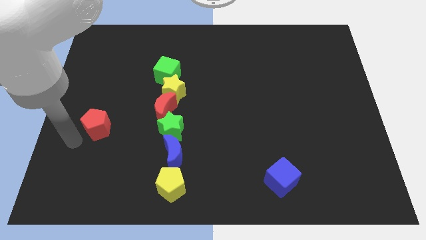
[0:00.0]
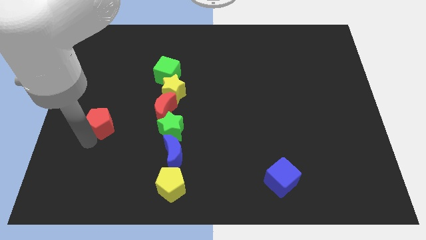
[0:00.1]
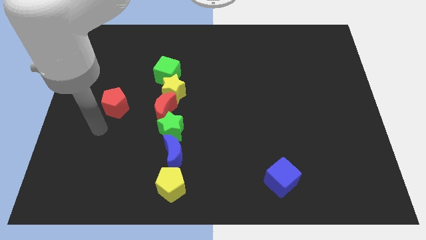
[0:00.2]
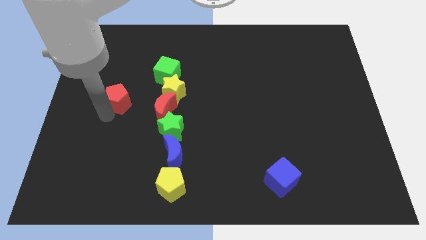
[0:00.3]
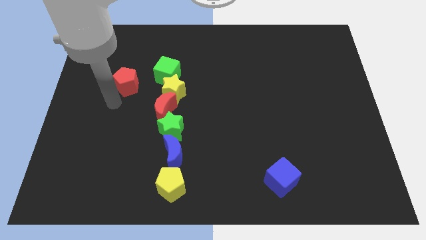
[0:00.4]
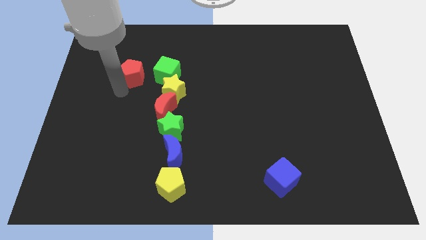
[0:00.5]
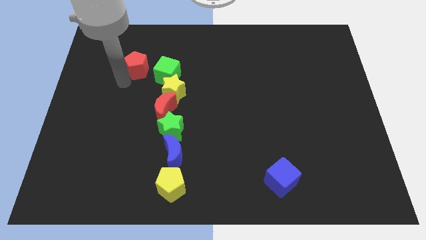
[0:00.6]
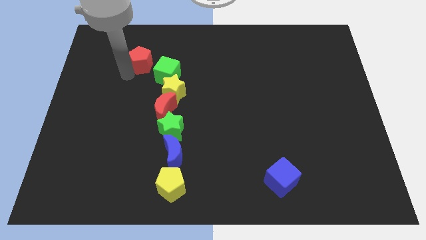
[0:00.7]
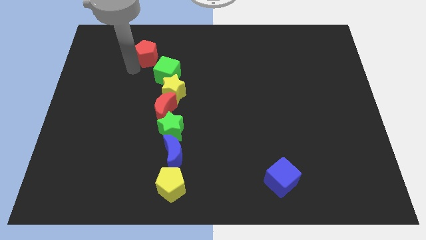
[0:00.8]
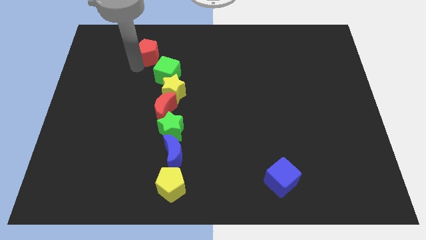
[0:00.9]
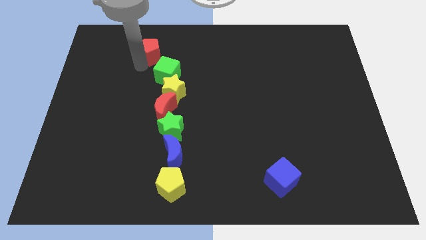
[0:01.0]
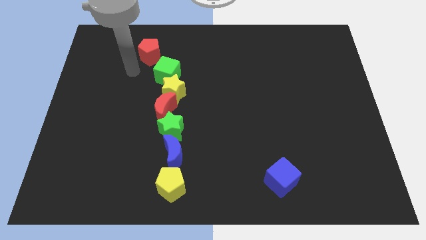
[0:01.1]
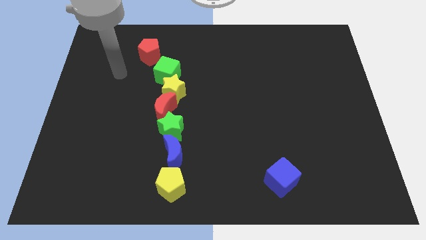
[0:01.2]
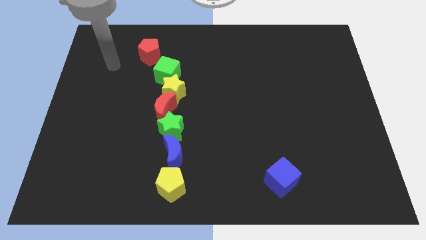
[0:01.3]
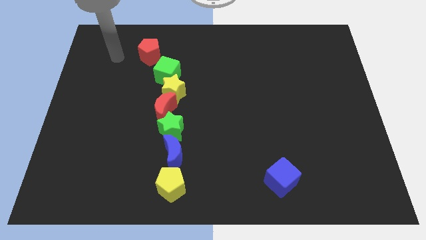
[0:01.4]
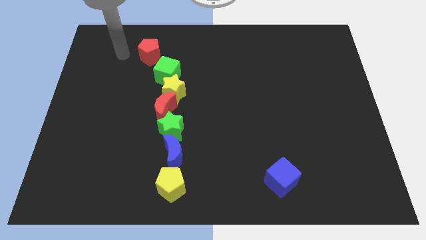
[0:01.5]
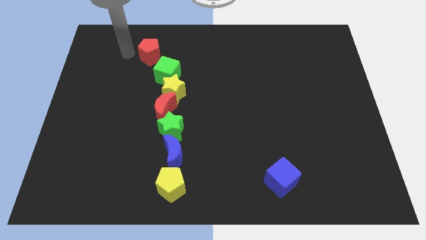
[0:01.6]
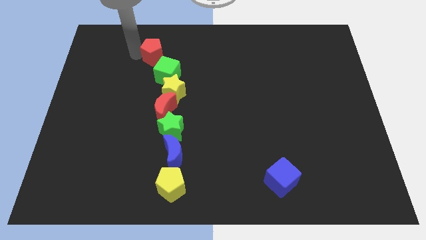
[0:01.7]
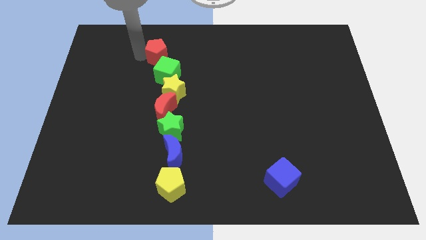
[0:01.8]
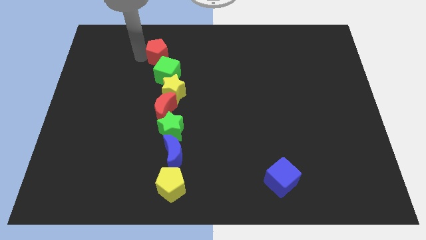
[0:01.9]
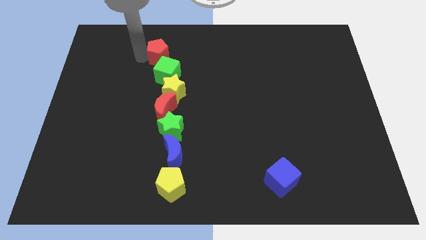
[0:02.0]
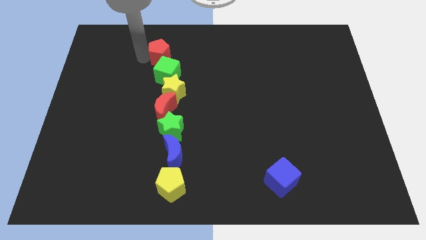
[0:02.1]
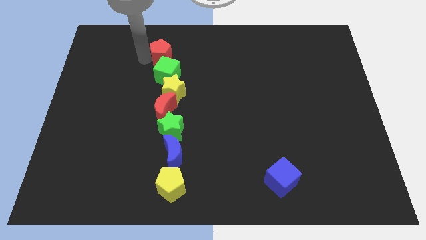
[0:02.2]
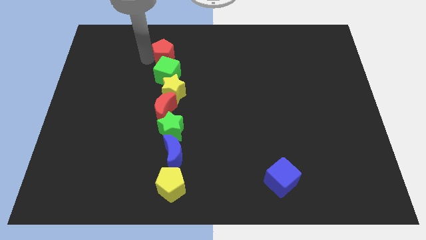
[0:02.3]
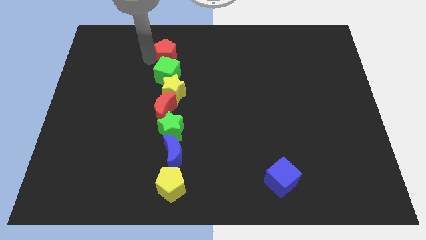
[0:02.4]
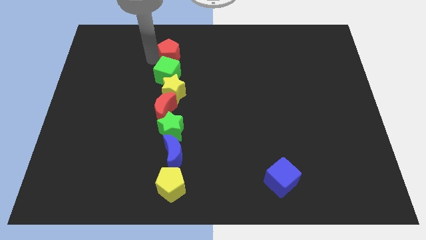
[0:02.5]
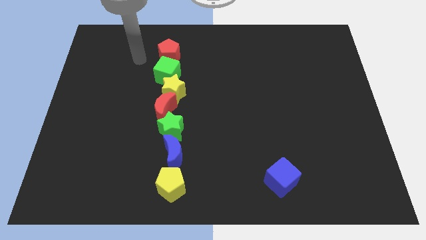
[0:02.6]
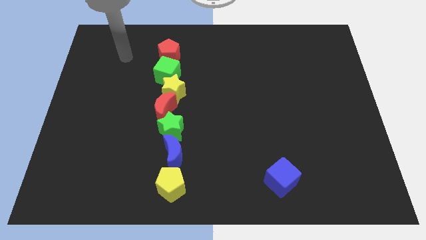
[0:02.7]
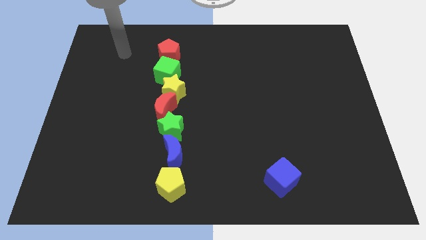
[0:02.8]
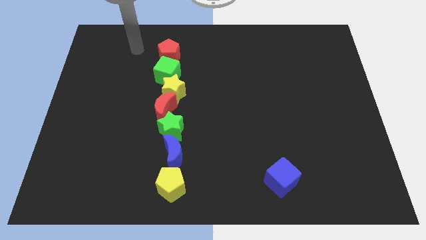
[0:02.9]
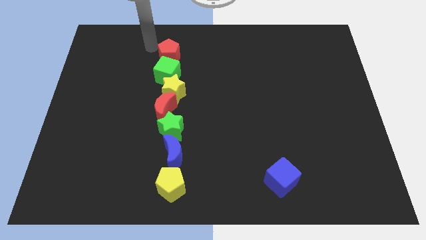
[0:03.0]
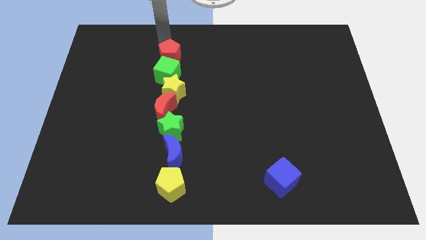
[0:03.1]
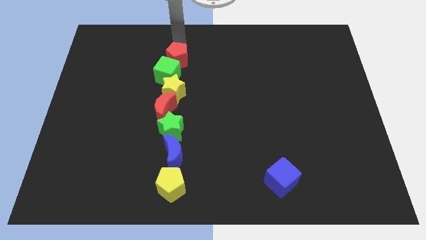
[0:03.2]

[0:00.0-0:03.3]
move the red pentagon to the top of the green cube

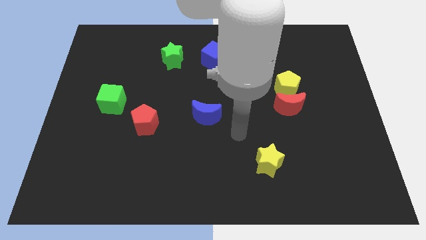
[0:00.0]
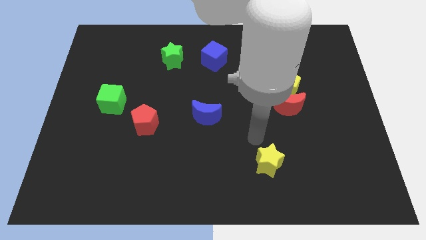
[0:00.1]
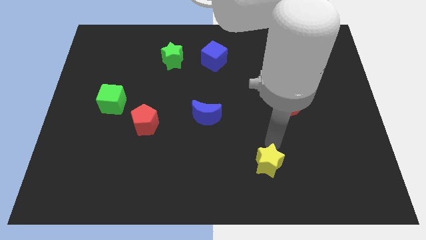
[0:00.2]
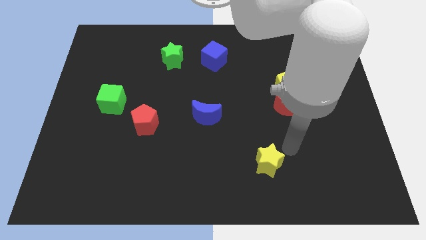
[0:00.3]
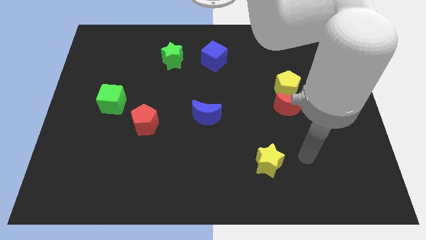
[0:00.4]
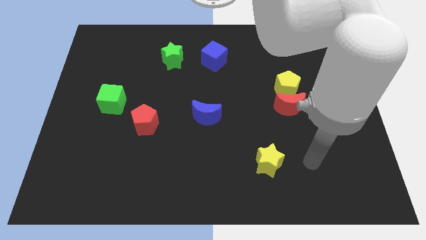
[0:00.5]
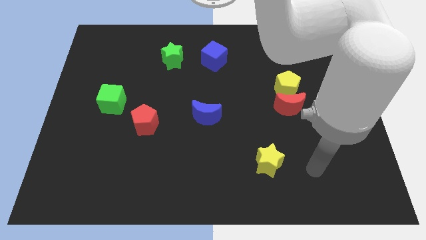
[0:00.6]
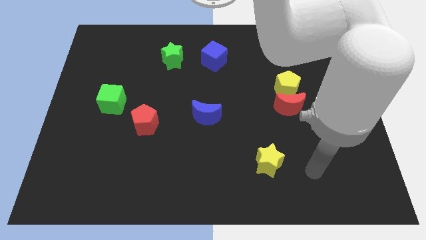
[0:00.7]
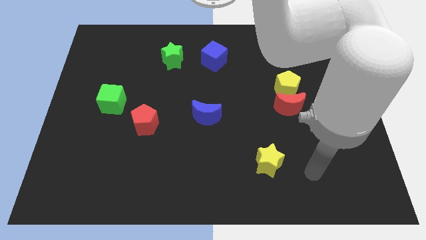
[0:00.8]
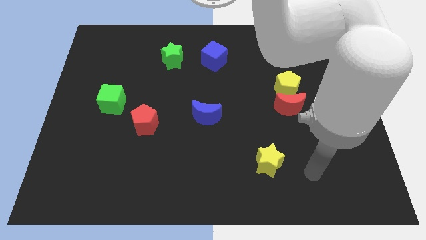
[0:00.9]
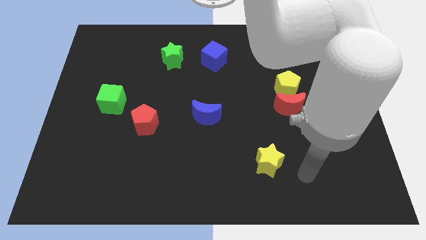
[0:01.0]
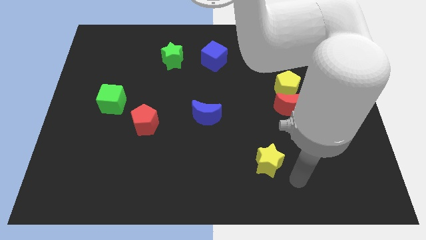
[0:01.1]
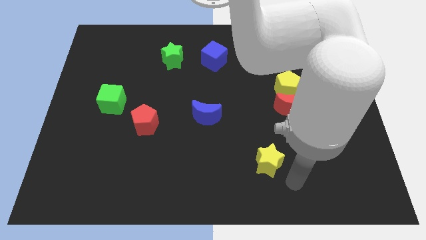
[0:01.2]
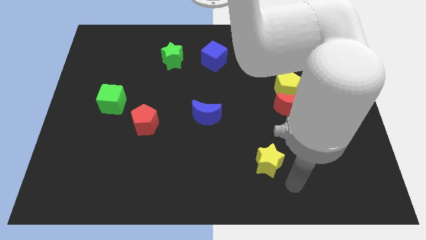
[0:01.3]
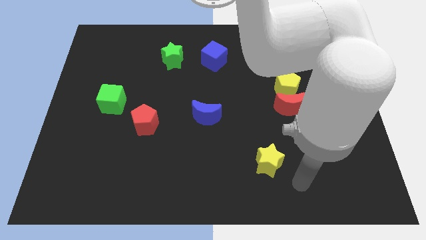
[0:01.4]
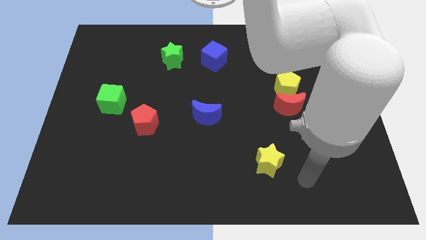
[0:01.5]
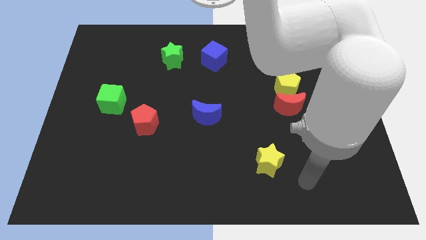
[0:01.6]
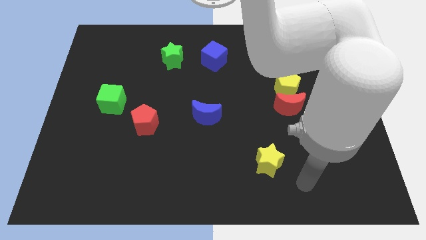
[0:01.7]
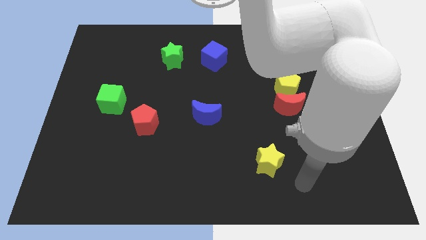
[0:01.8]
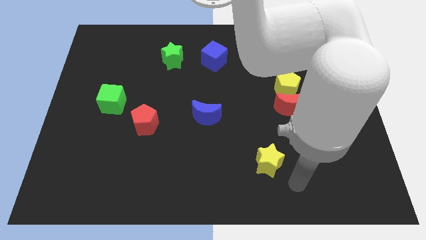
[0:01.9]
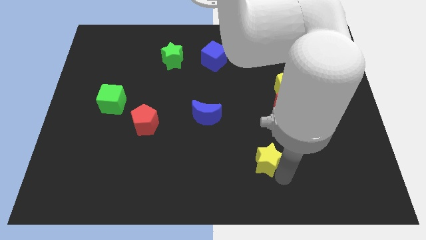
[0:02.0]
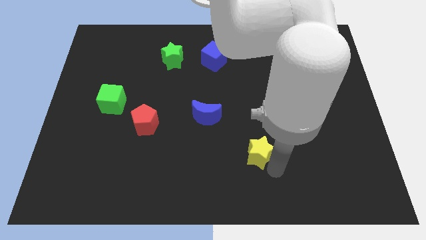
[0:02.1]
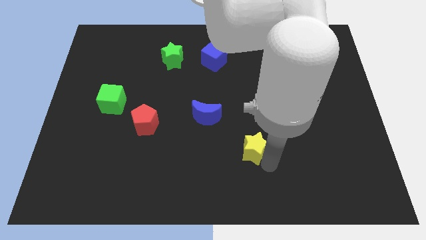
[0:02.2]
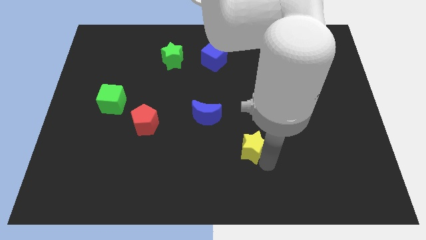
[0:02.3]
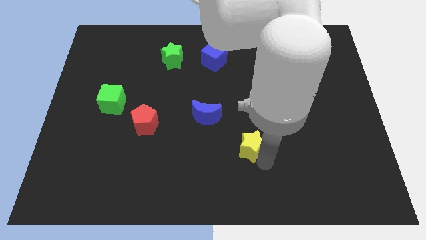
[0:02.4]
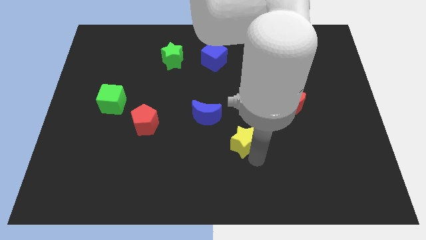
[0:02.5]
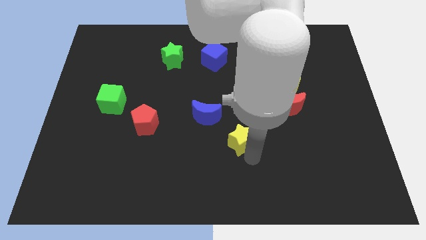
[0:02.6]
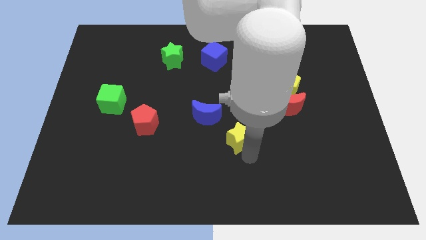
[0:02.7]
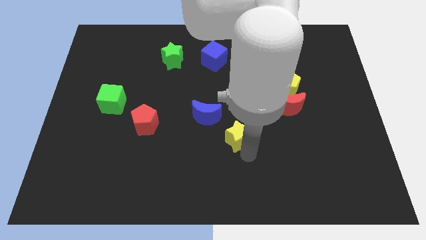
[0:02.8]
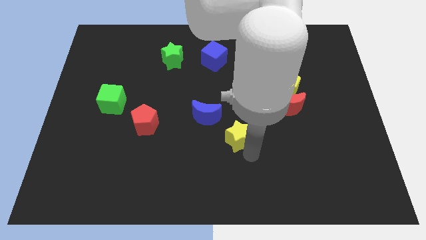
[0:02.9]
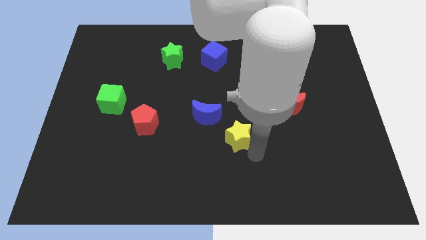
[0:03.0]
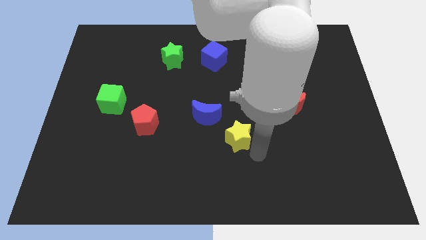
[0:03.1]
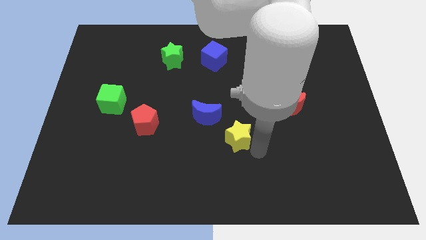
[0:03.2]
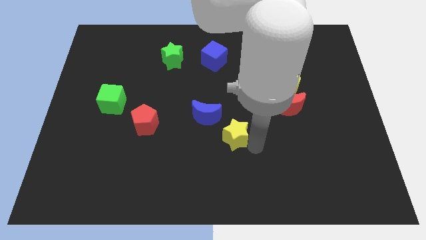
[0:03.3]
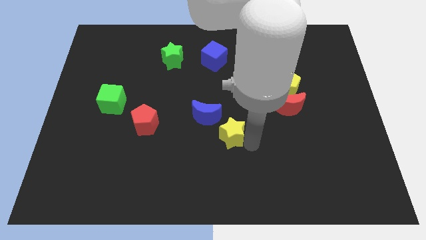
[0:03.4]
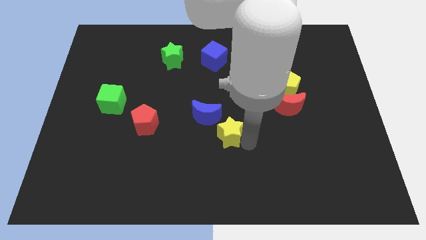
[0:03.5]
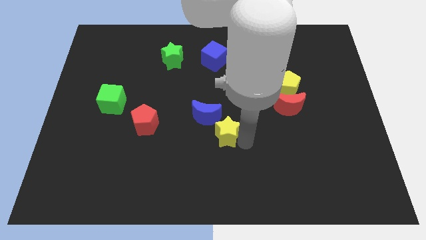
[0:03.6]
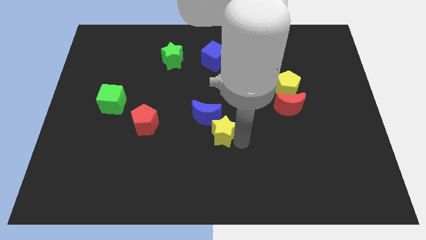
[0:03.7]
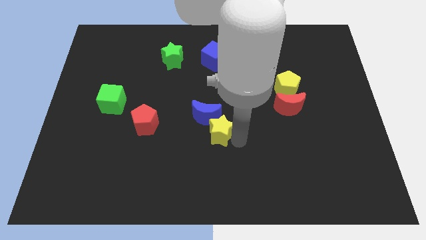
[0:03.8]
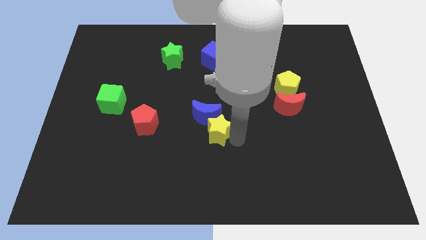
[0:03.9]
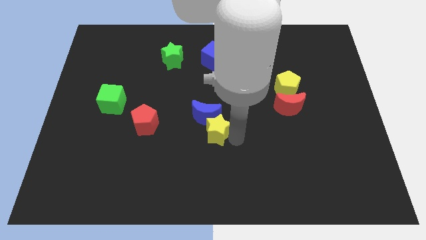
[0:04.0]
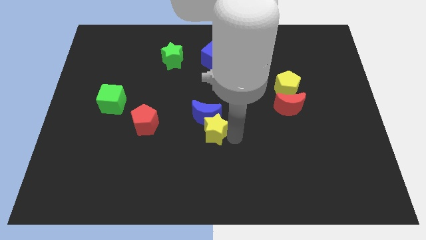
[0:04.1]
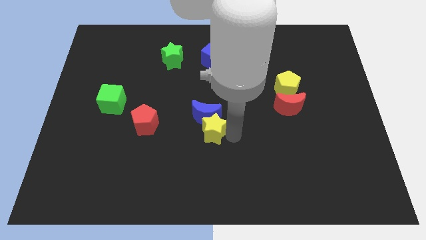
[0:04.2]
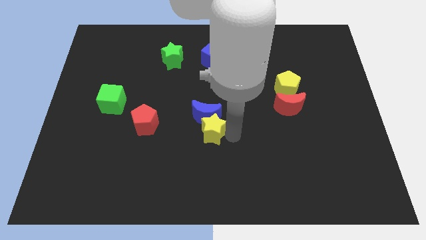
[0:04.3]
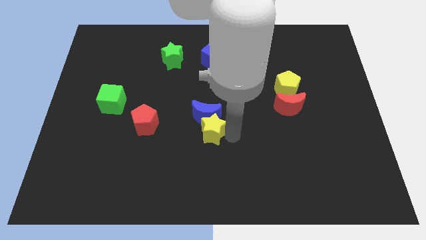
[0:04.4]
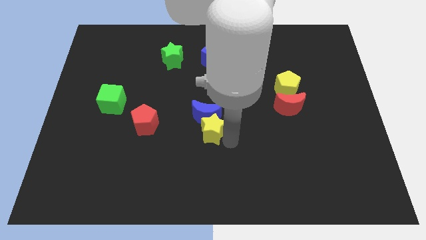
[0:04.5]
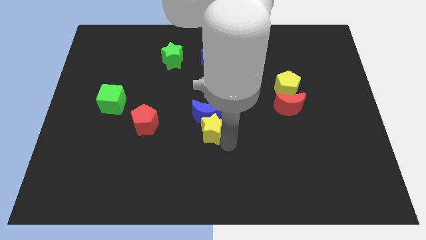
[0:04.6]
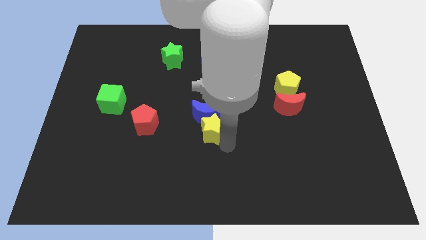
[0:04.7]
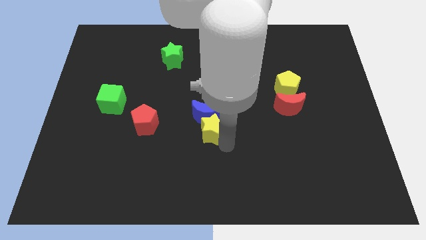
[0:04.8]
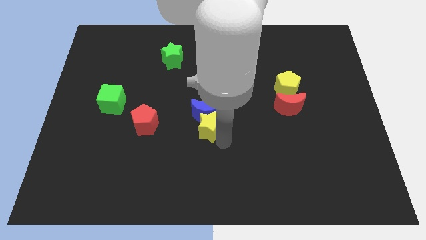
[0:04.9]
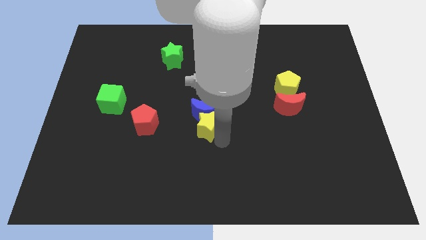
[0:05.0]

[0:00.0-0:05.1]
push the yellow star into the bottom of the blue crescent

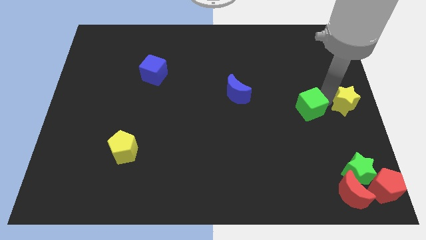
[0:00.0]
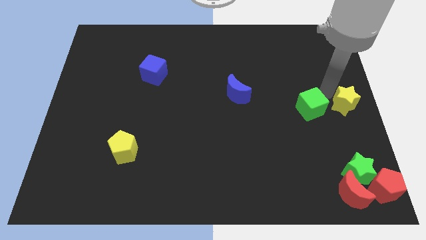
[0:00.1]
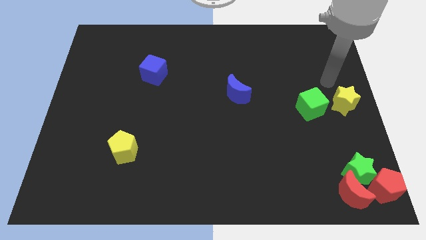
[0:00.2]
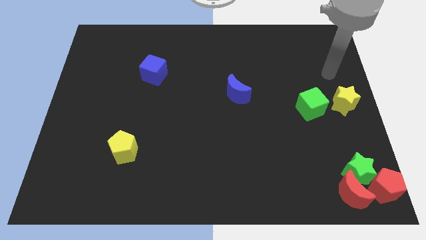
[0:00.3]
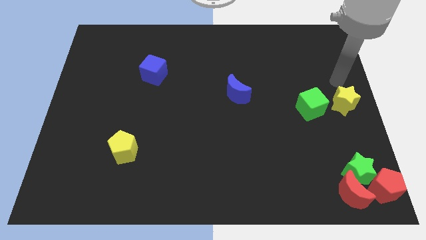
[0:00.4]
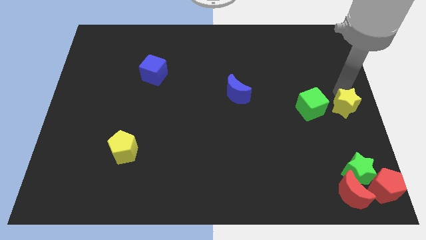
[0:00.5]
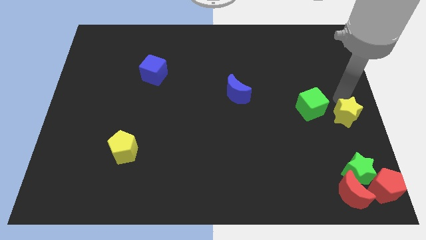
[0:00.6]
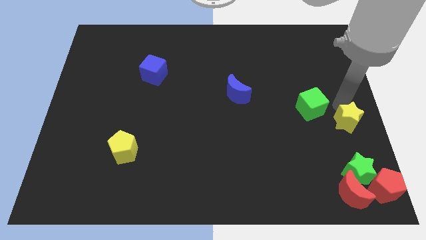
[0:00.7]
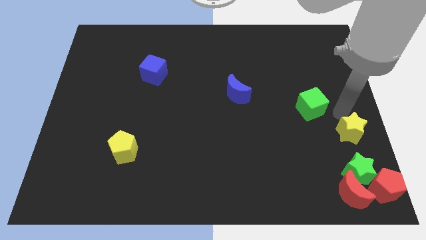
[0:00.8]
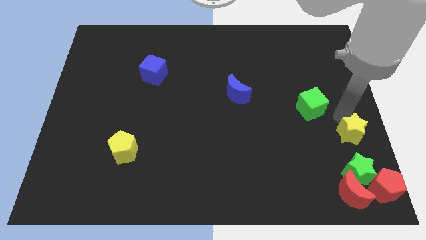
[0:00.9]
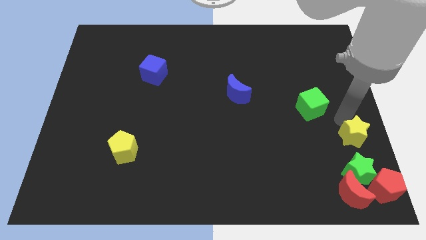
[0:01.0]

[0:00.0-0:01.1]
push the yellow star towards the green star
